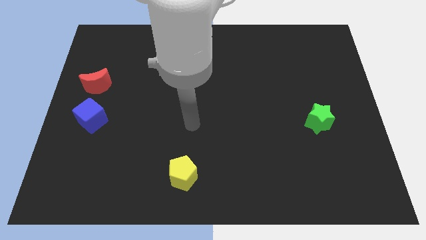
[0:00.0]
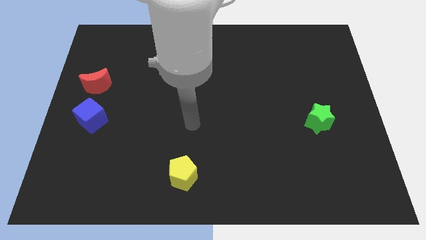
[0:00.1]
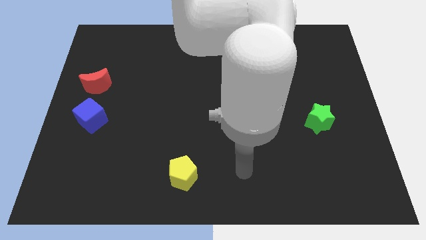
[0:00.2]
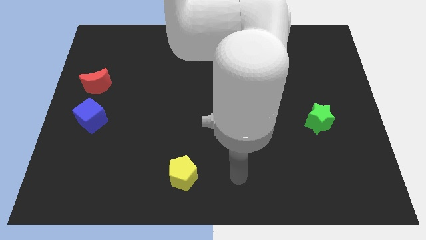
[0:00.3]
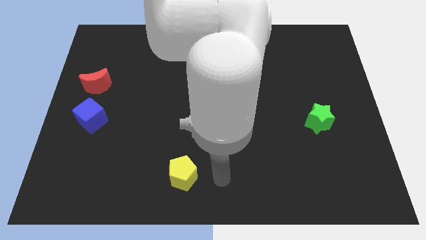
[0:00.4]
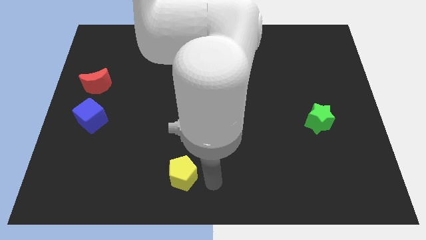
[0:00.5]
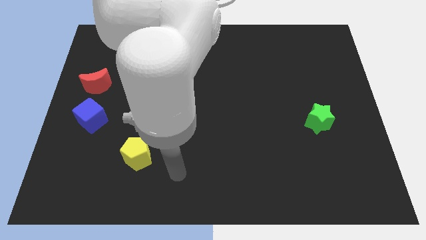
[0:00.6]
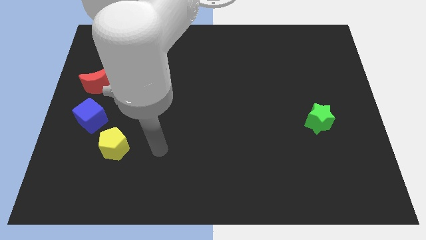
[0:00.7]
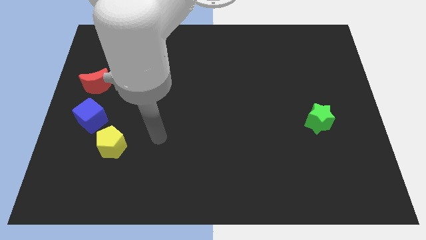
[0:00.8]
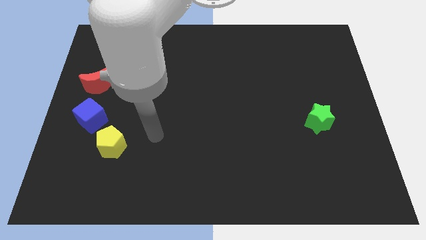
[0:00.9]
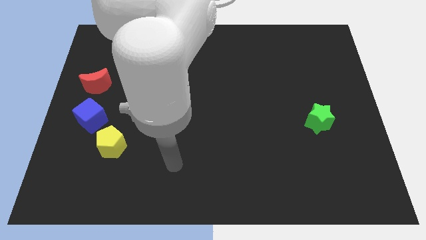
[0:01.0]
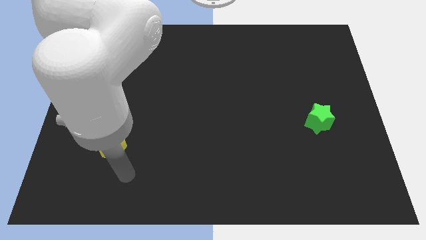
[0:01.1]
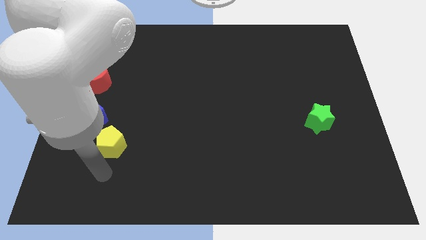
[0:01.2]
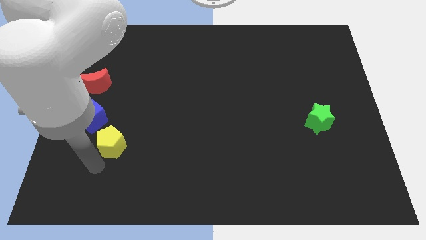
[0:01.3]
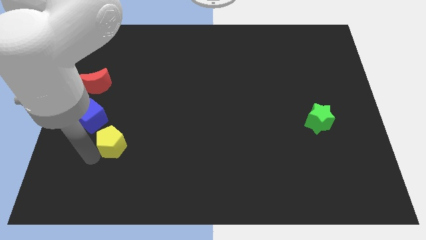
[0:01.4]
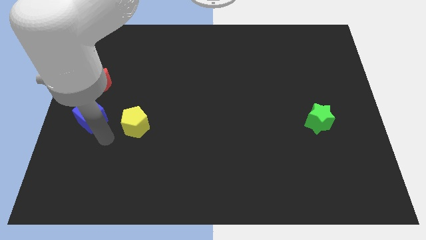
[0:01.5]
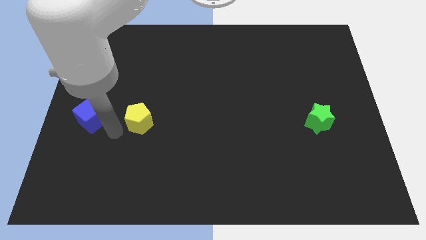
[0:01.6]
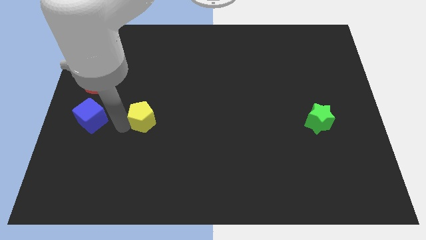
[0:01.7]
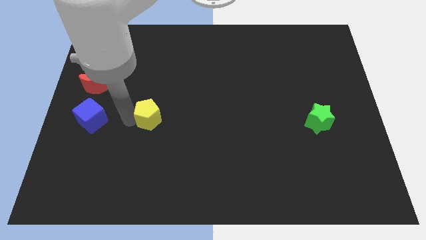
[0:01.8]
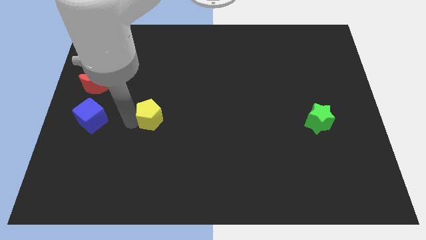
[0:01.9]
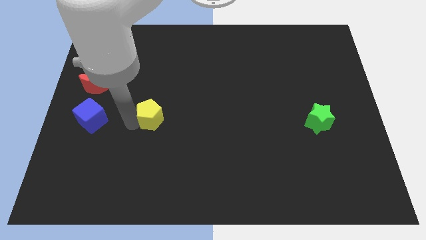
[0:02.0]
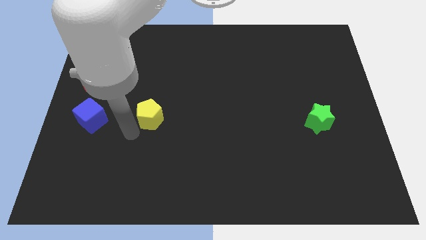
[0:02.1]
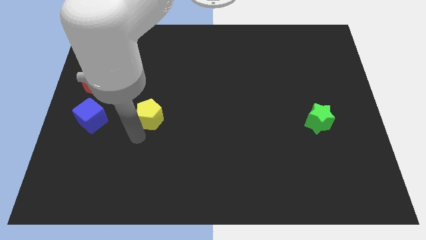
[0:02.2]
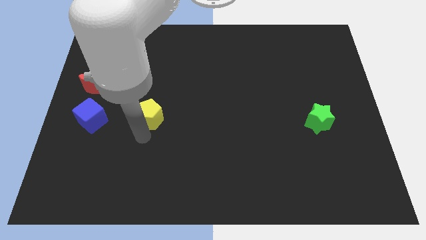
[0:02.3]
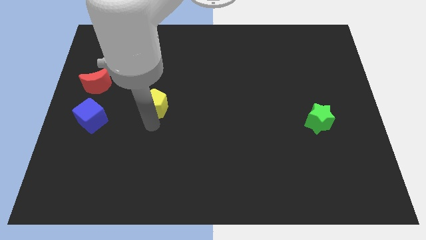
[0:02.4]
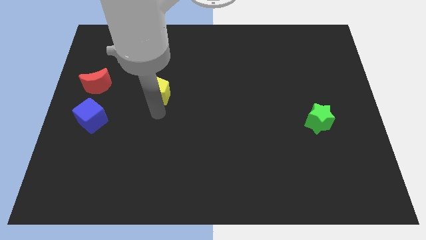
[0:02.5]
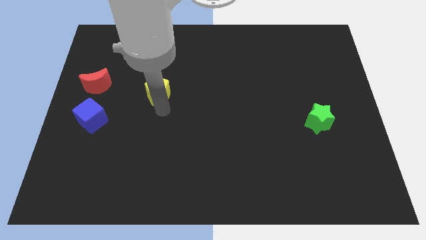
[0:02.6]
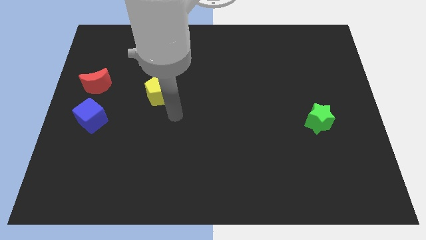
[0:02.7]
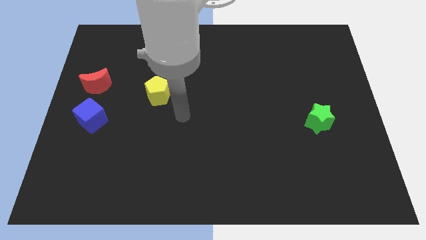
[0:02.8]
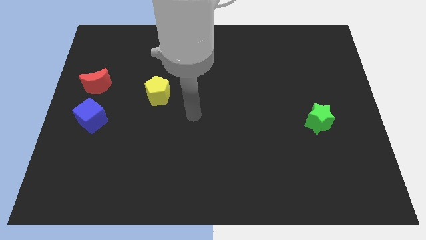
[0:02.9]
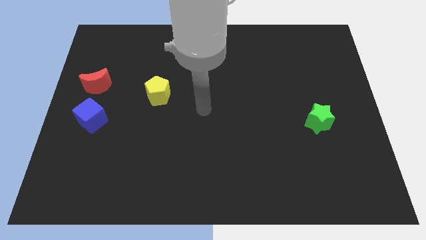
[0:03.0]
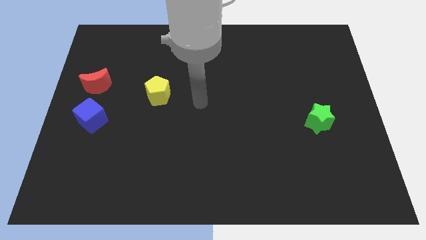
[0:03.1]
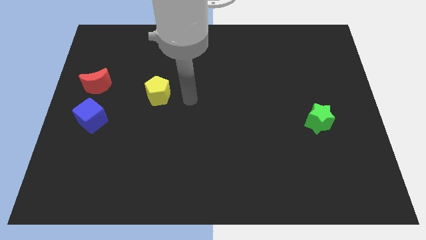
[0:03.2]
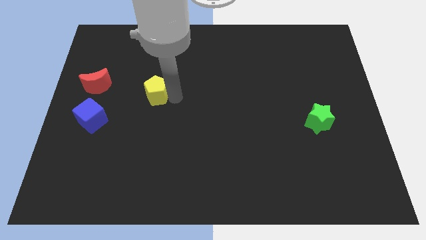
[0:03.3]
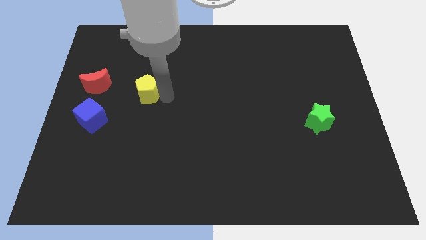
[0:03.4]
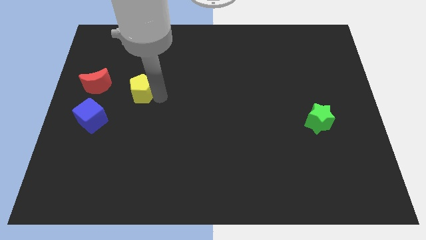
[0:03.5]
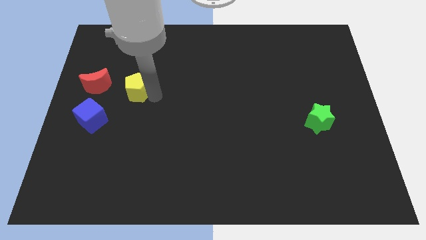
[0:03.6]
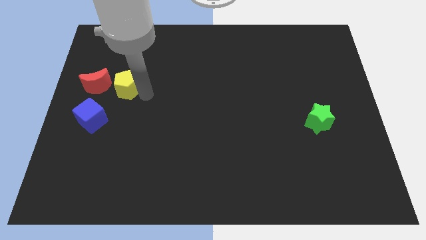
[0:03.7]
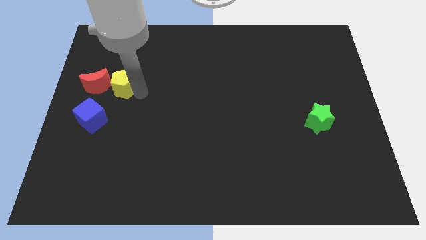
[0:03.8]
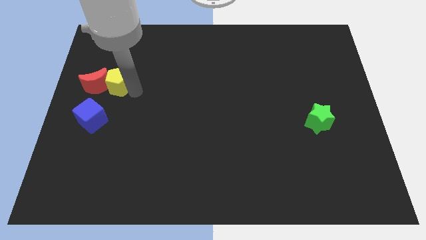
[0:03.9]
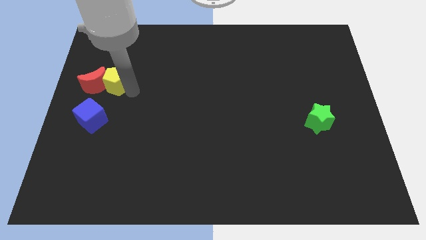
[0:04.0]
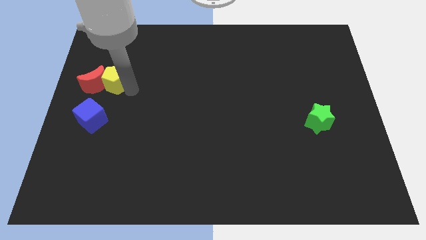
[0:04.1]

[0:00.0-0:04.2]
move the yellow block close to the red moon

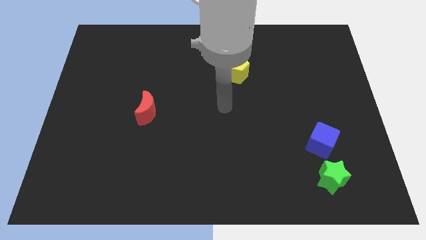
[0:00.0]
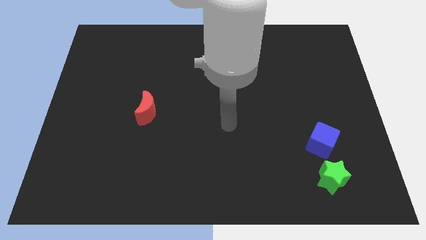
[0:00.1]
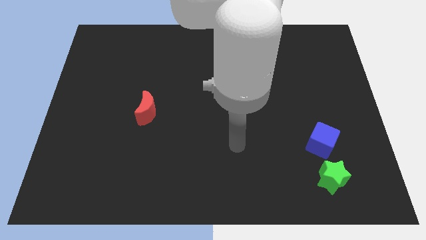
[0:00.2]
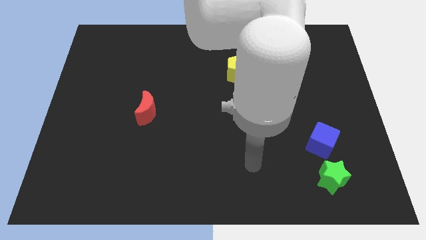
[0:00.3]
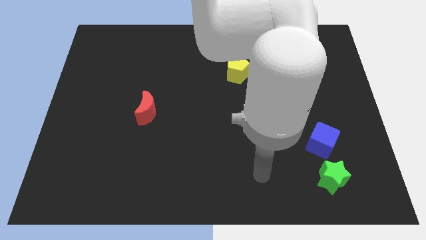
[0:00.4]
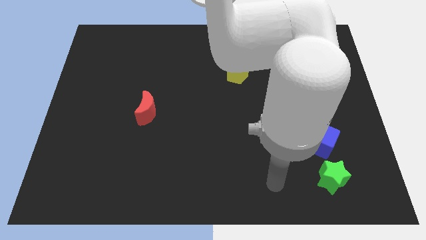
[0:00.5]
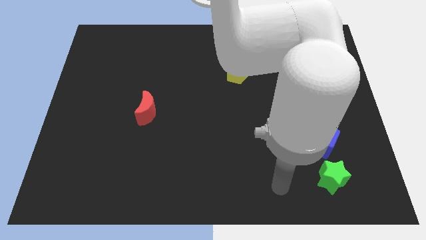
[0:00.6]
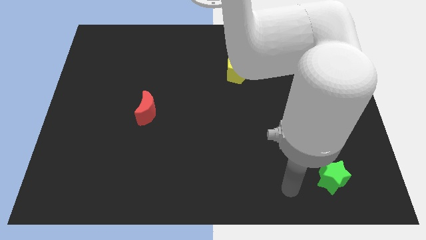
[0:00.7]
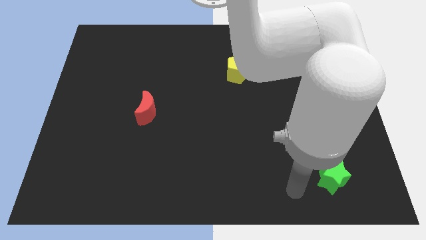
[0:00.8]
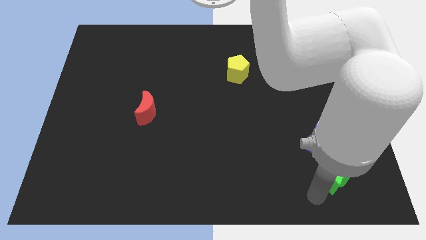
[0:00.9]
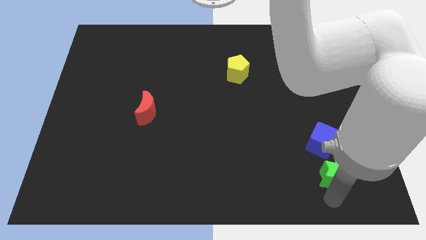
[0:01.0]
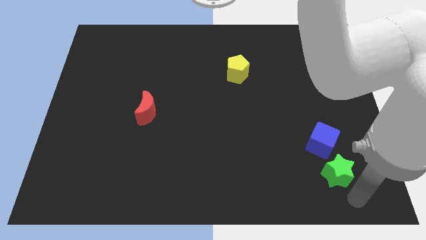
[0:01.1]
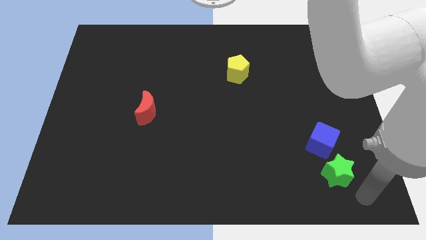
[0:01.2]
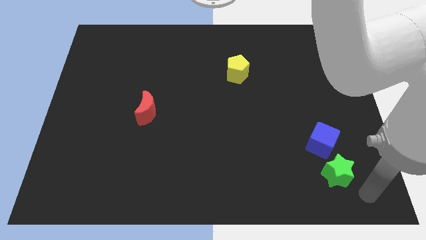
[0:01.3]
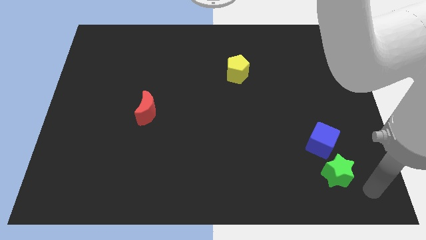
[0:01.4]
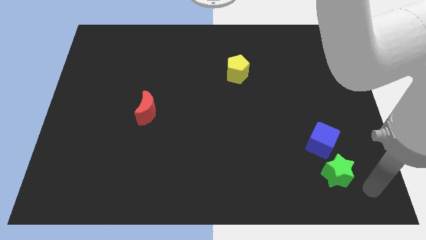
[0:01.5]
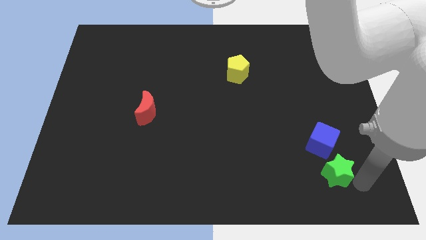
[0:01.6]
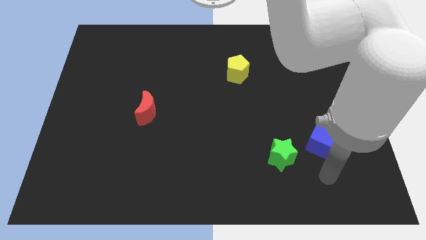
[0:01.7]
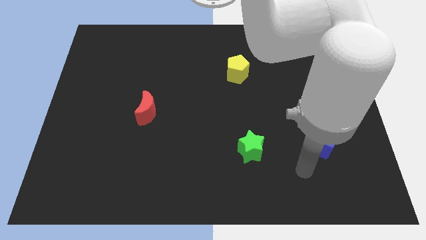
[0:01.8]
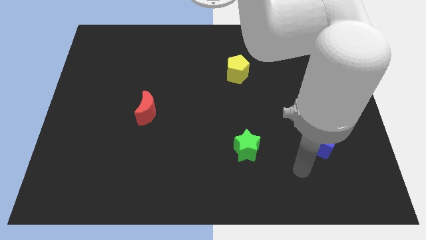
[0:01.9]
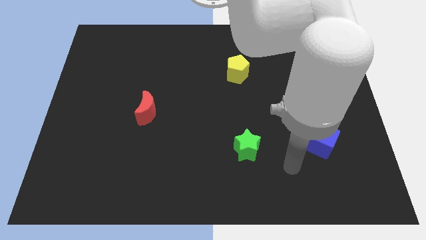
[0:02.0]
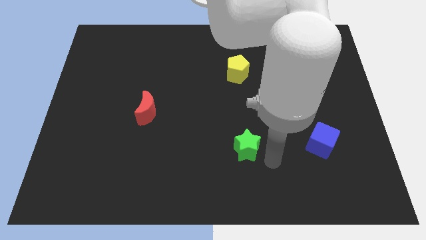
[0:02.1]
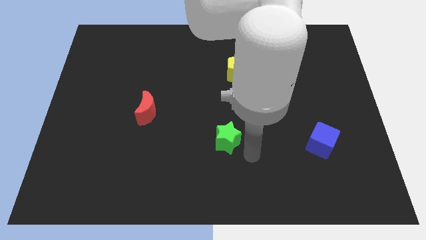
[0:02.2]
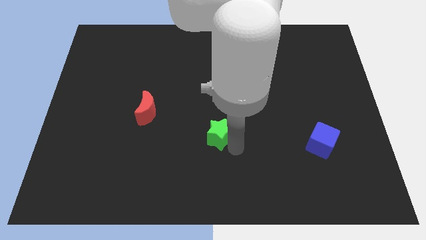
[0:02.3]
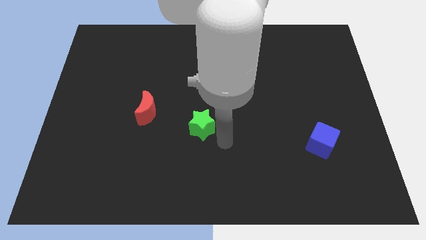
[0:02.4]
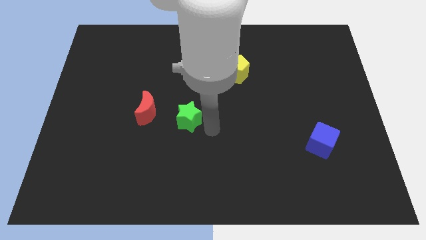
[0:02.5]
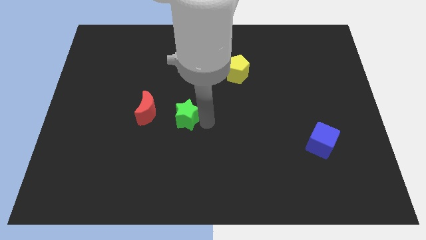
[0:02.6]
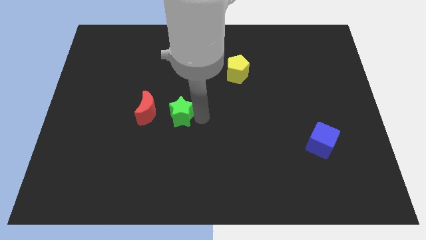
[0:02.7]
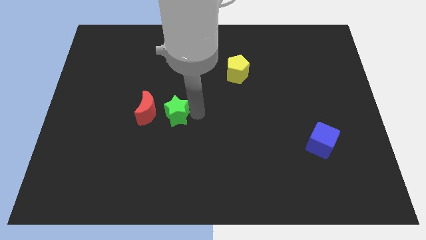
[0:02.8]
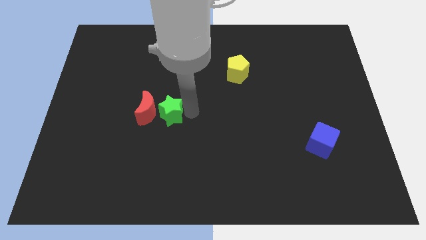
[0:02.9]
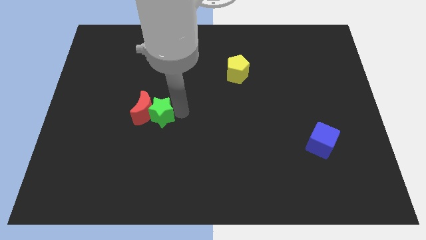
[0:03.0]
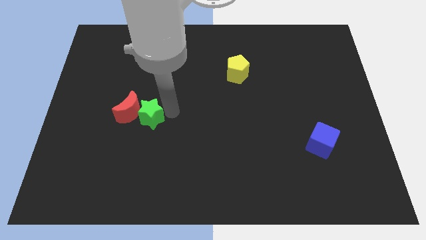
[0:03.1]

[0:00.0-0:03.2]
put the star to the red moon

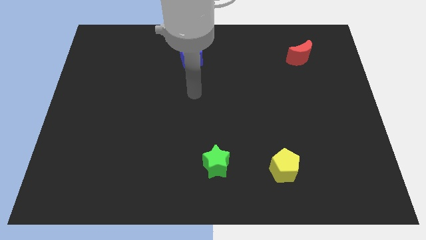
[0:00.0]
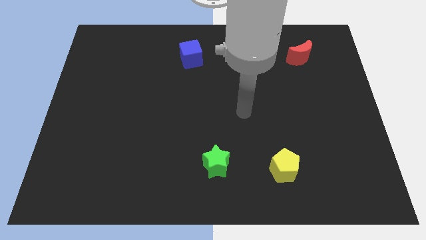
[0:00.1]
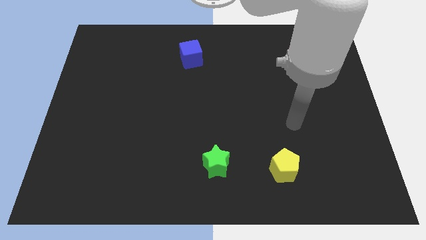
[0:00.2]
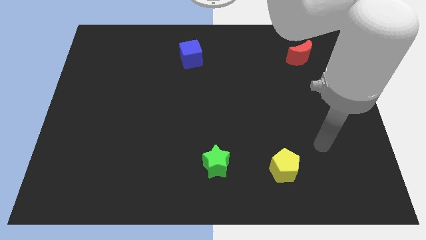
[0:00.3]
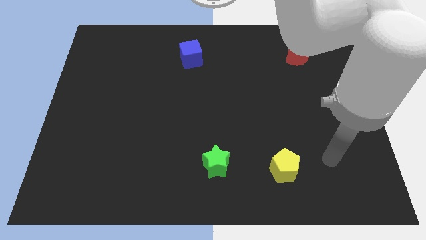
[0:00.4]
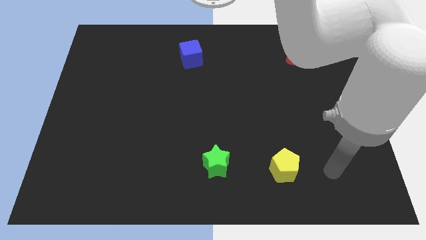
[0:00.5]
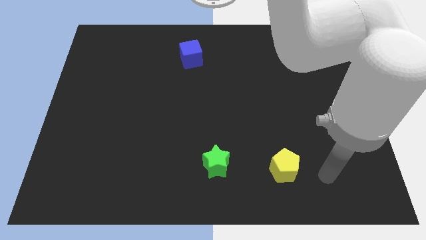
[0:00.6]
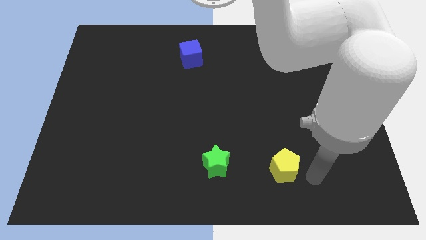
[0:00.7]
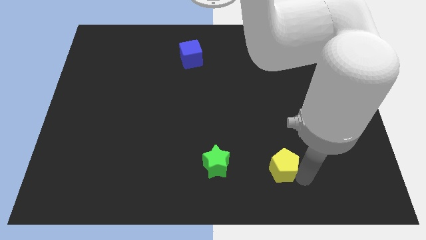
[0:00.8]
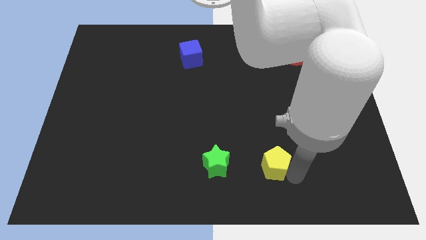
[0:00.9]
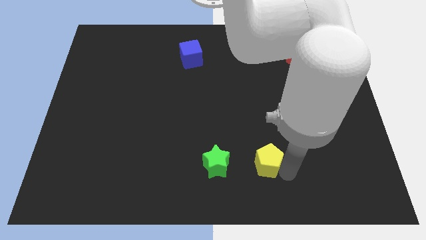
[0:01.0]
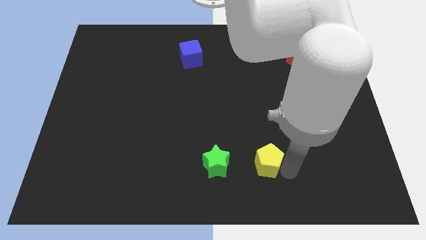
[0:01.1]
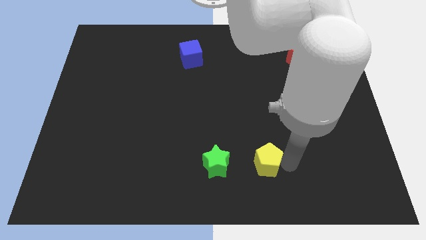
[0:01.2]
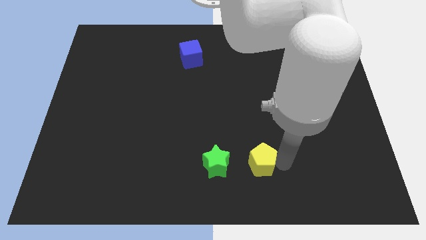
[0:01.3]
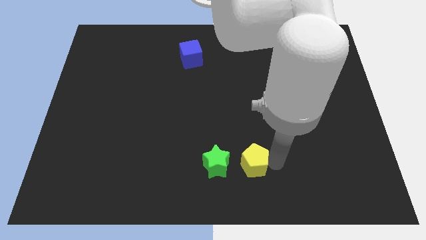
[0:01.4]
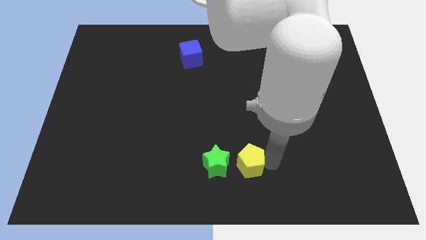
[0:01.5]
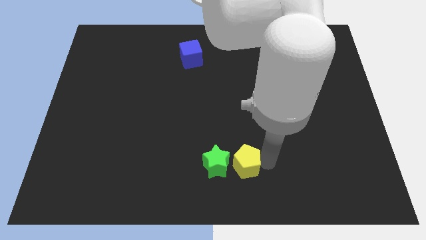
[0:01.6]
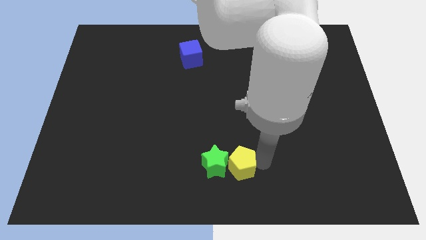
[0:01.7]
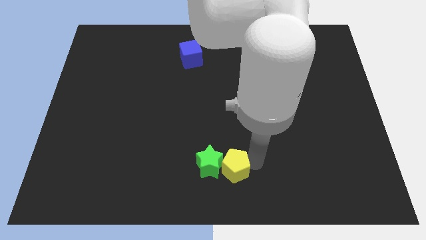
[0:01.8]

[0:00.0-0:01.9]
put the yellow block to the star
